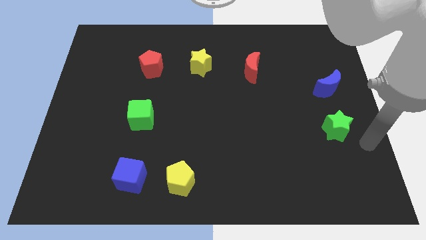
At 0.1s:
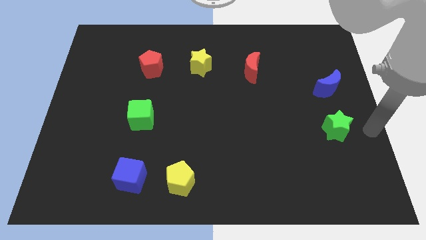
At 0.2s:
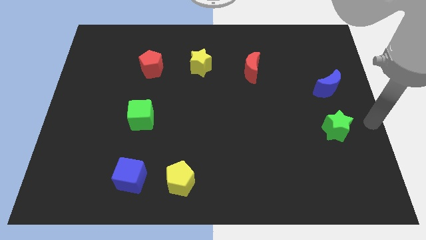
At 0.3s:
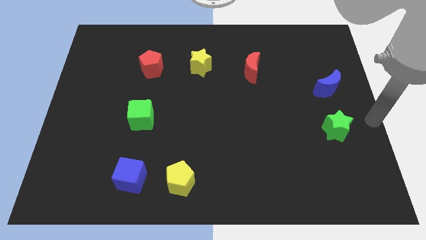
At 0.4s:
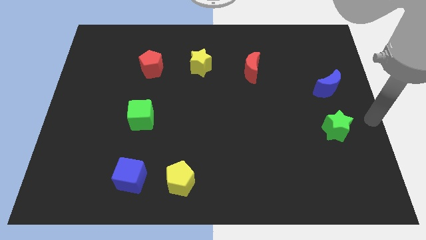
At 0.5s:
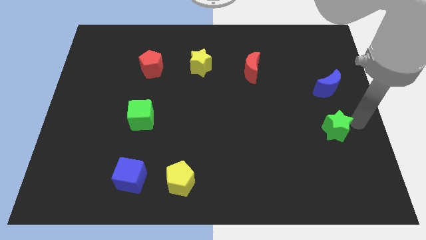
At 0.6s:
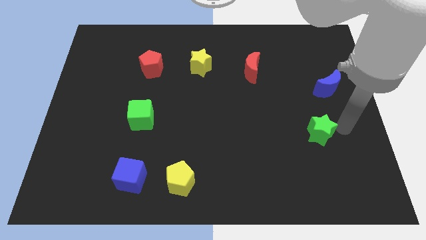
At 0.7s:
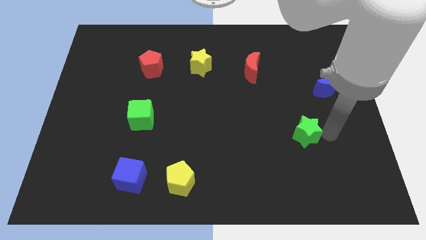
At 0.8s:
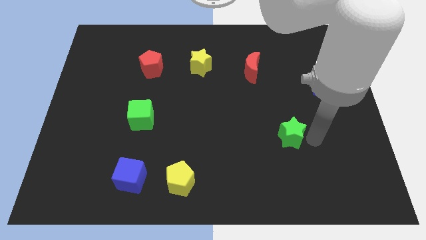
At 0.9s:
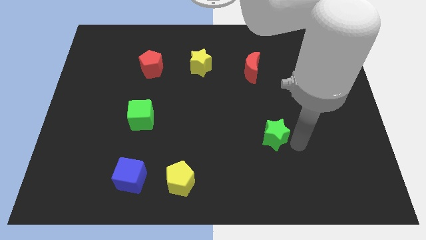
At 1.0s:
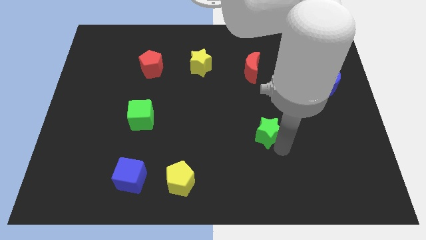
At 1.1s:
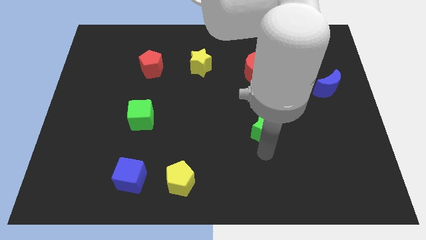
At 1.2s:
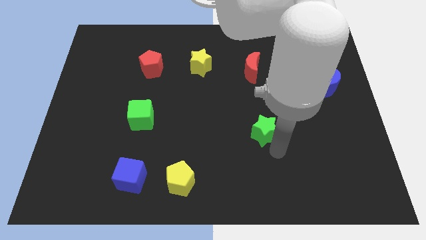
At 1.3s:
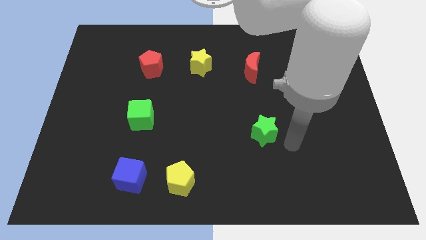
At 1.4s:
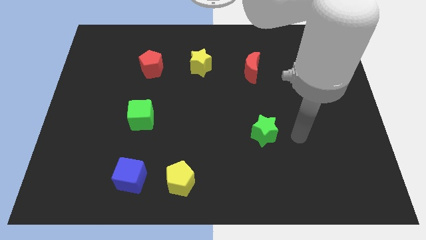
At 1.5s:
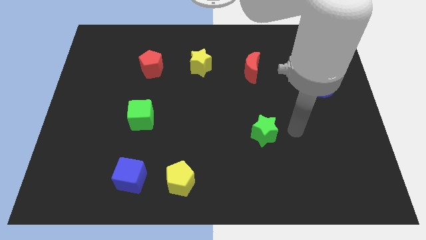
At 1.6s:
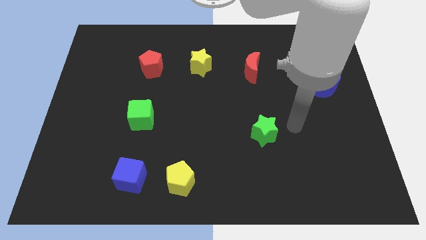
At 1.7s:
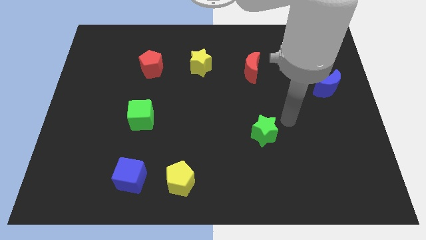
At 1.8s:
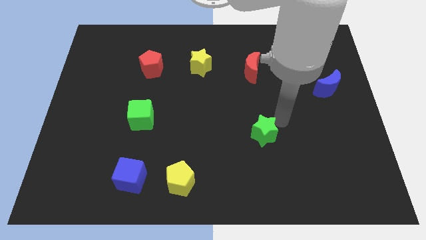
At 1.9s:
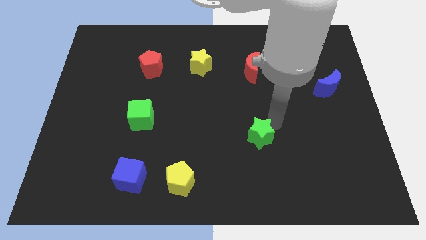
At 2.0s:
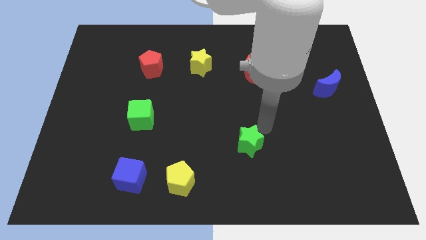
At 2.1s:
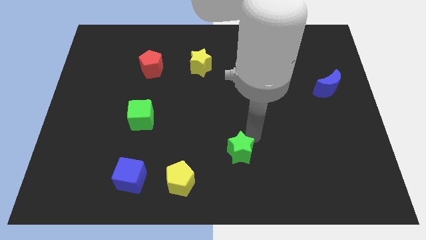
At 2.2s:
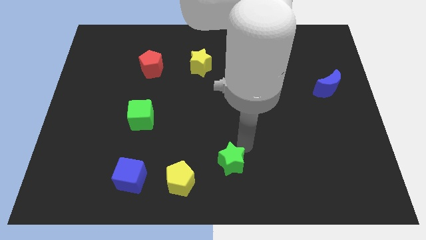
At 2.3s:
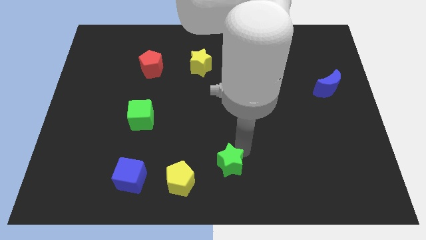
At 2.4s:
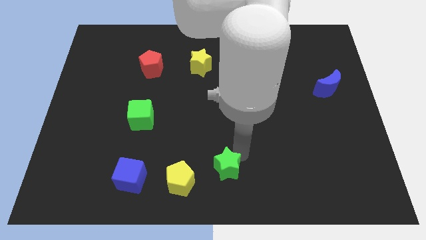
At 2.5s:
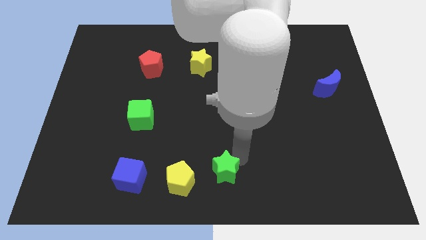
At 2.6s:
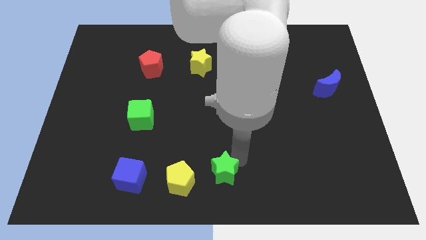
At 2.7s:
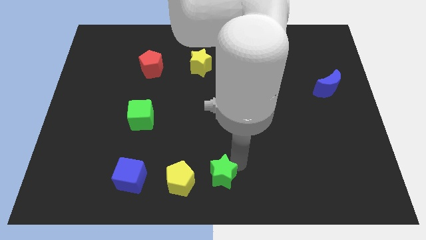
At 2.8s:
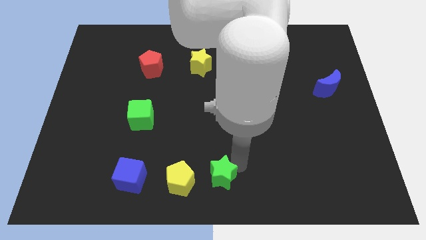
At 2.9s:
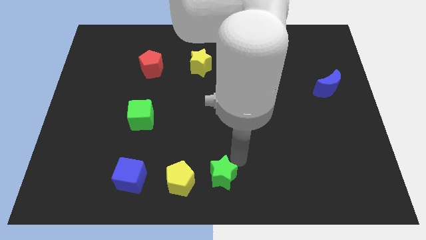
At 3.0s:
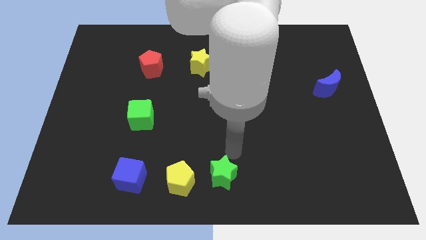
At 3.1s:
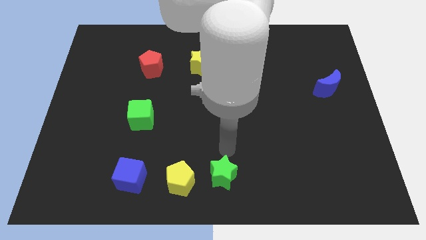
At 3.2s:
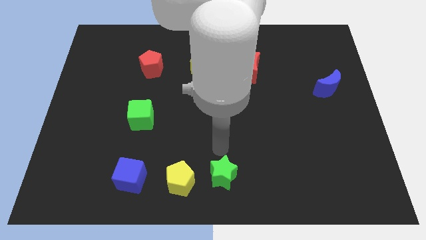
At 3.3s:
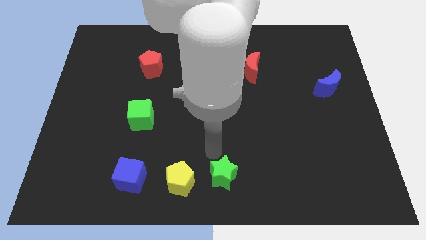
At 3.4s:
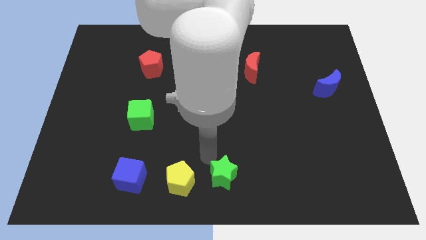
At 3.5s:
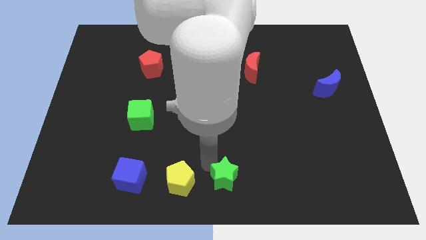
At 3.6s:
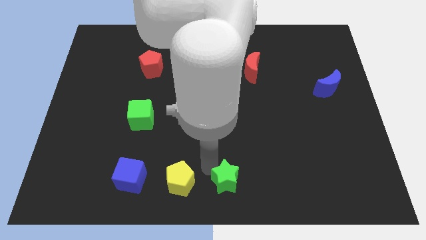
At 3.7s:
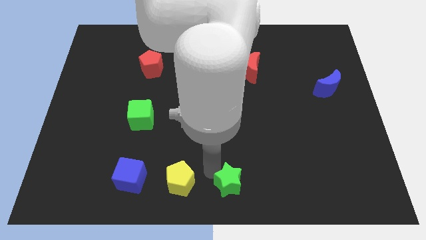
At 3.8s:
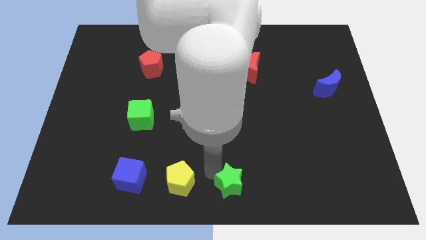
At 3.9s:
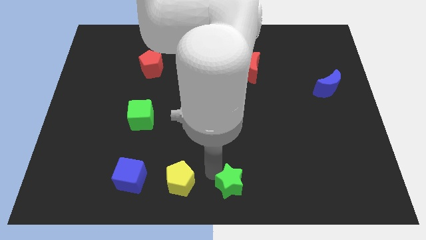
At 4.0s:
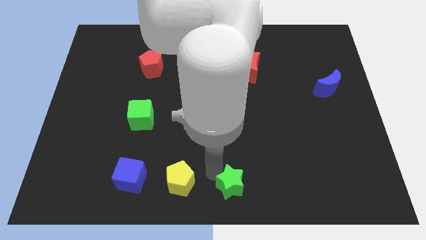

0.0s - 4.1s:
place the green star to the right of the yellow pentagon

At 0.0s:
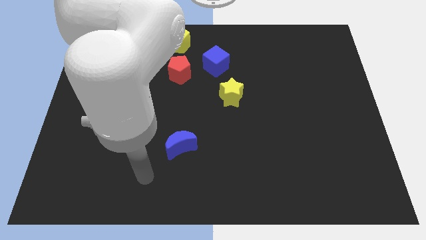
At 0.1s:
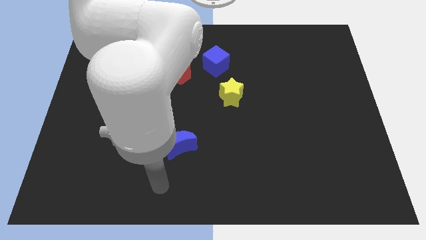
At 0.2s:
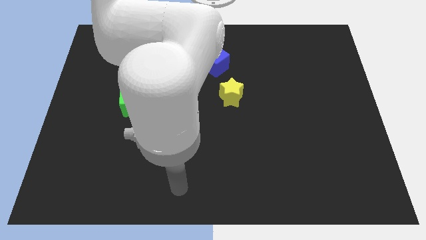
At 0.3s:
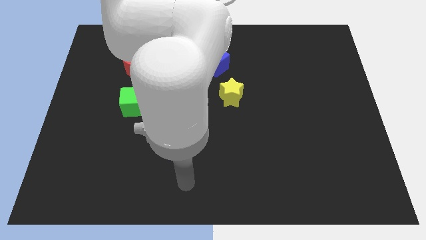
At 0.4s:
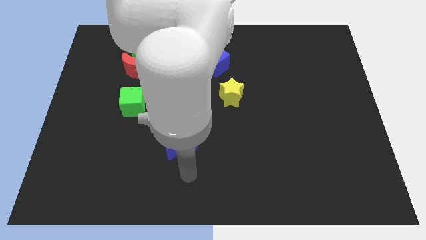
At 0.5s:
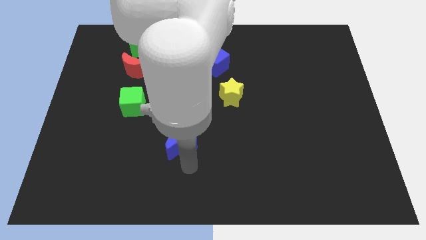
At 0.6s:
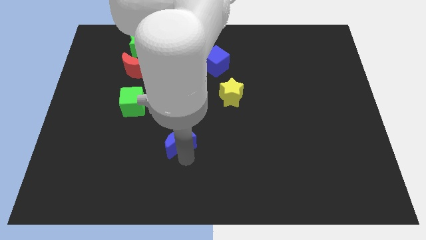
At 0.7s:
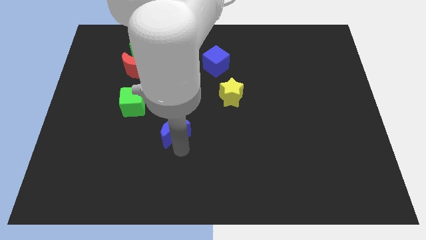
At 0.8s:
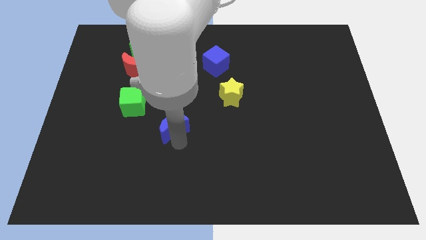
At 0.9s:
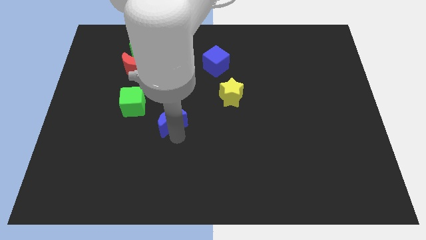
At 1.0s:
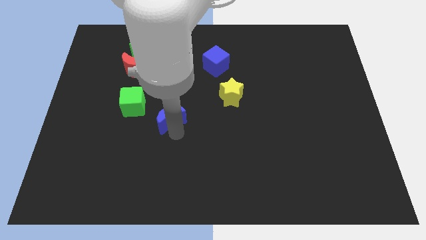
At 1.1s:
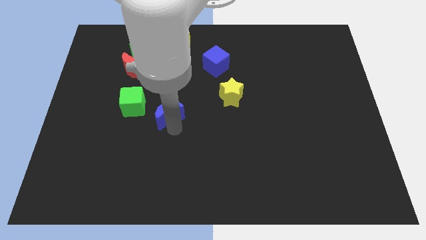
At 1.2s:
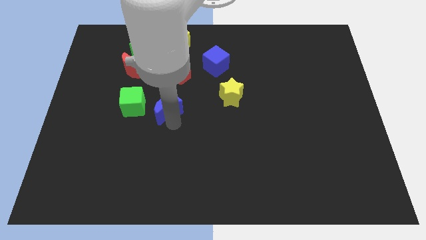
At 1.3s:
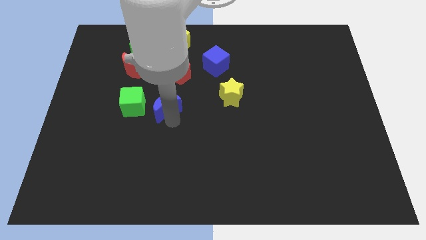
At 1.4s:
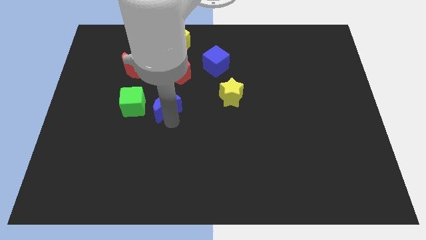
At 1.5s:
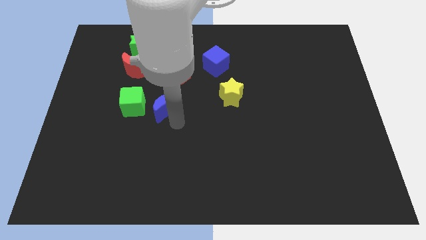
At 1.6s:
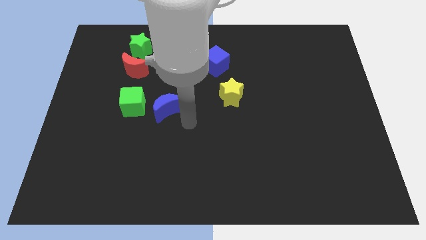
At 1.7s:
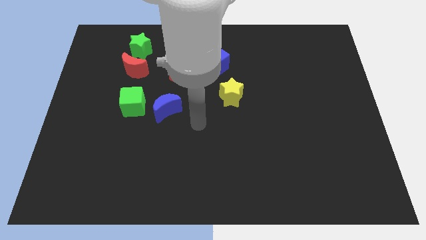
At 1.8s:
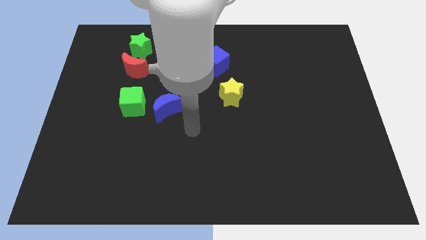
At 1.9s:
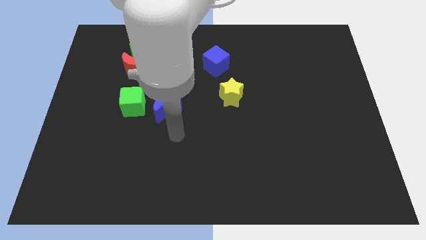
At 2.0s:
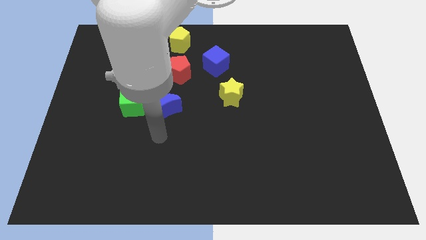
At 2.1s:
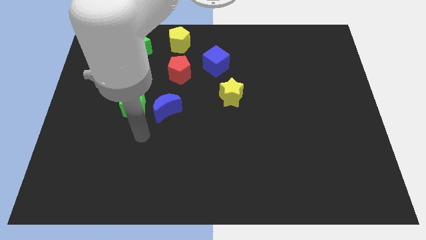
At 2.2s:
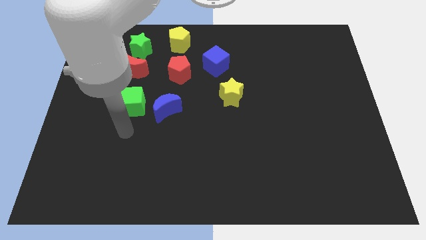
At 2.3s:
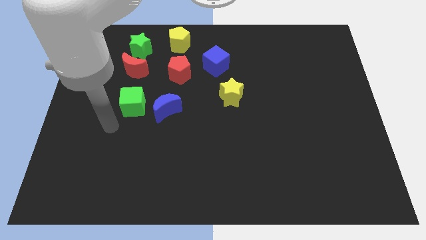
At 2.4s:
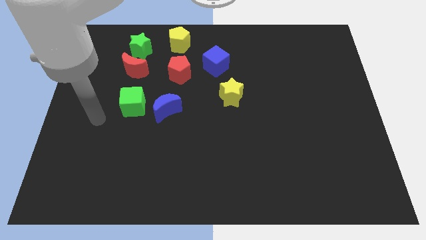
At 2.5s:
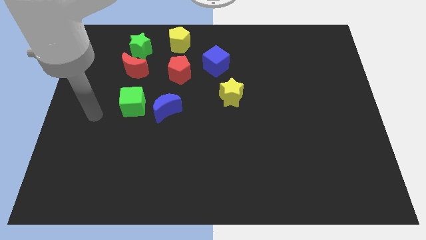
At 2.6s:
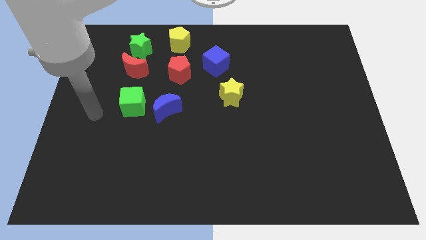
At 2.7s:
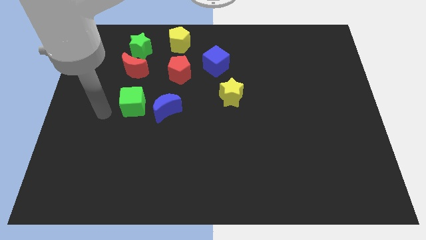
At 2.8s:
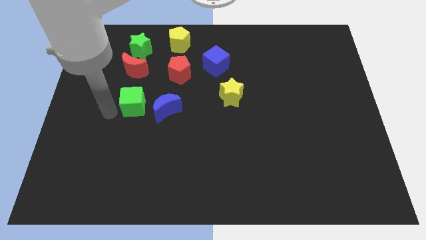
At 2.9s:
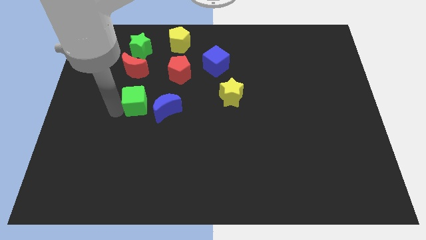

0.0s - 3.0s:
place the blue crescent right to the green cube

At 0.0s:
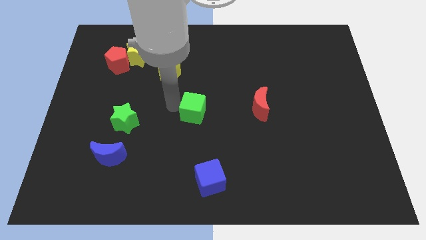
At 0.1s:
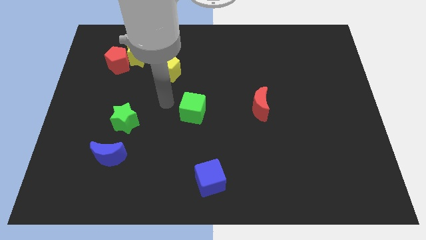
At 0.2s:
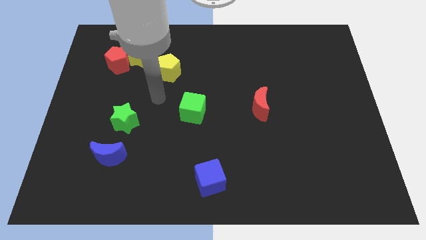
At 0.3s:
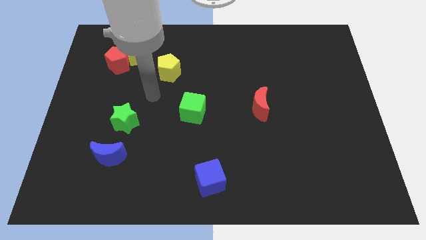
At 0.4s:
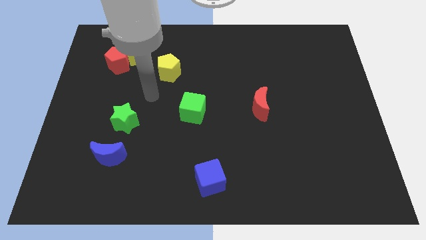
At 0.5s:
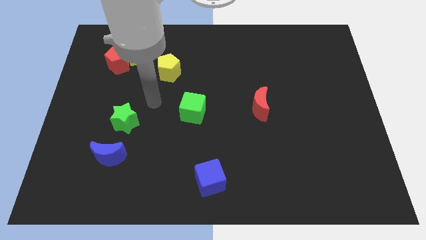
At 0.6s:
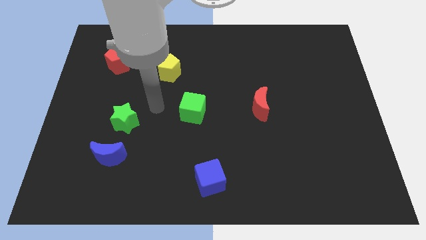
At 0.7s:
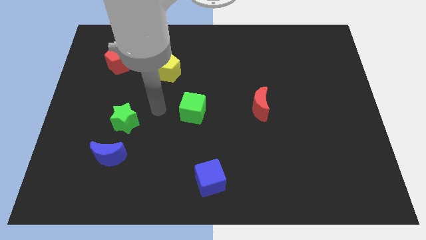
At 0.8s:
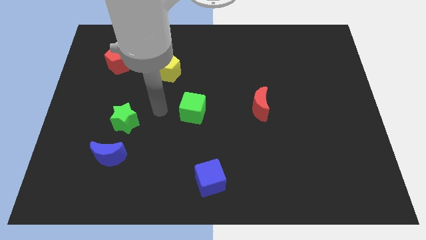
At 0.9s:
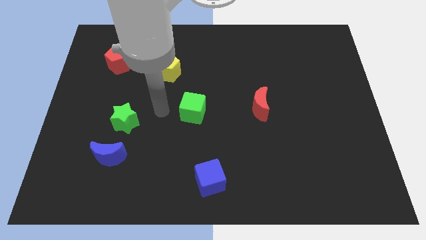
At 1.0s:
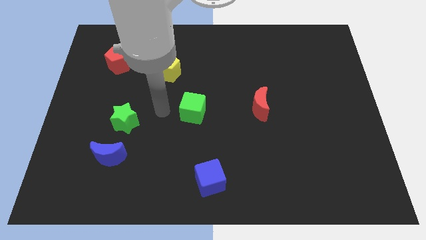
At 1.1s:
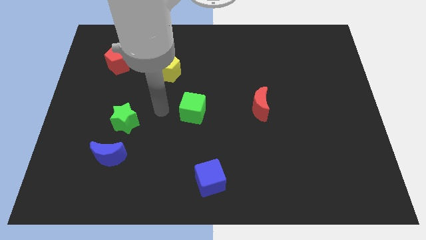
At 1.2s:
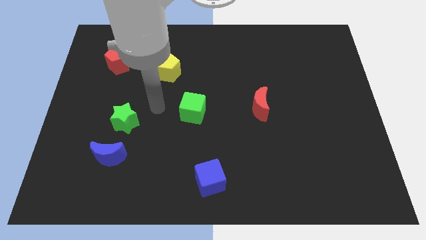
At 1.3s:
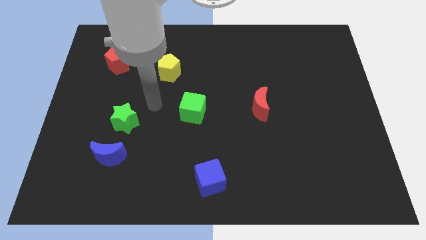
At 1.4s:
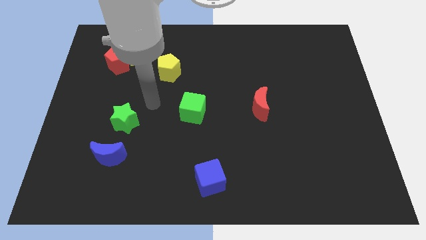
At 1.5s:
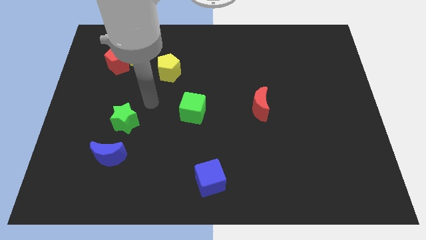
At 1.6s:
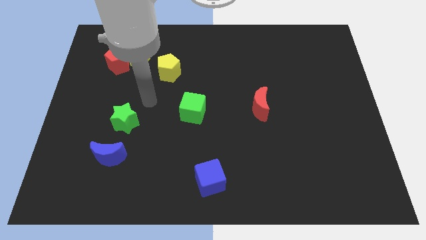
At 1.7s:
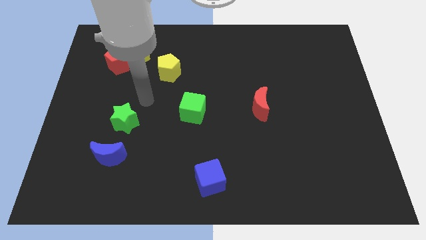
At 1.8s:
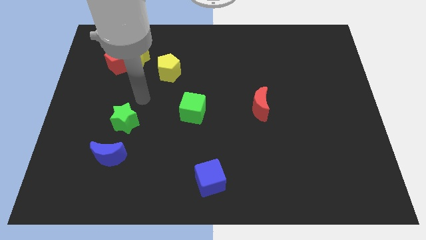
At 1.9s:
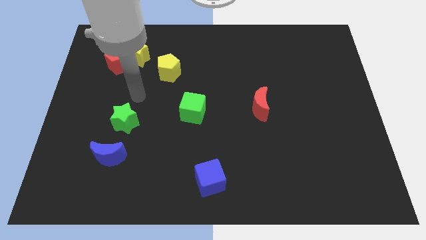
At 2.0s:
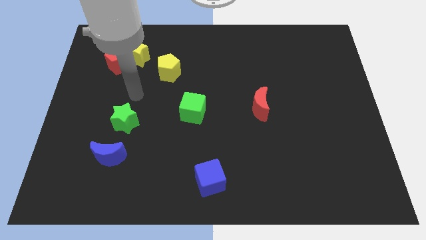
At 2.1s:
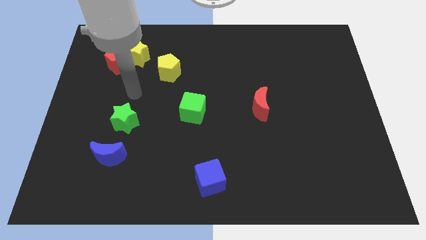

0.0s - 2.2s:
move arm to the top of green star
